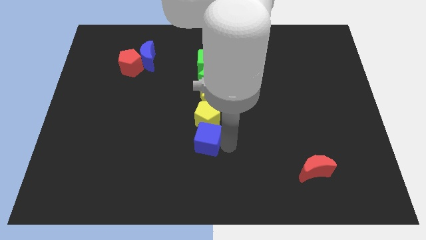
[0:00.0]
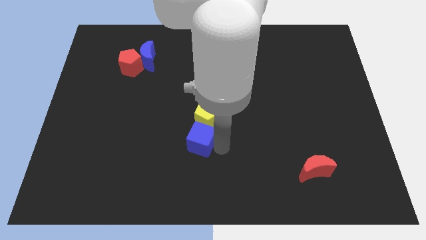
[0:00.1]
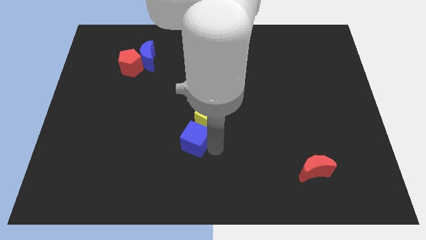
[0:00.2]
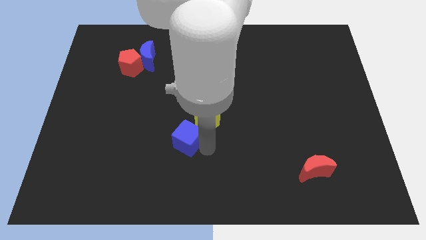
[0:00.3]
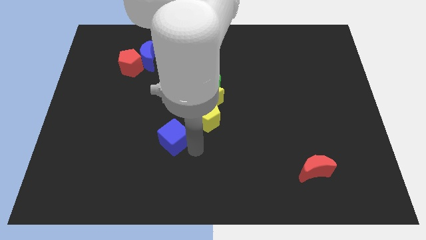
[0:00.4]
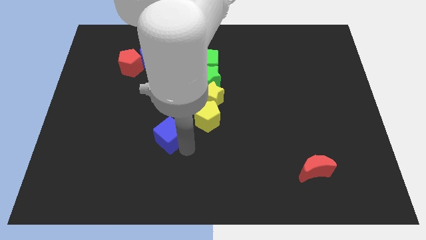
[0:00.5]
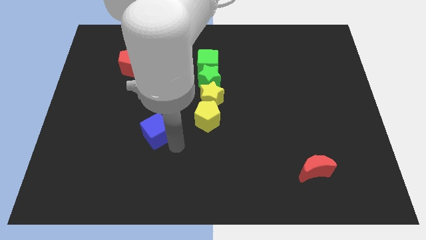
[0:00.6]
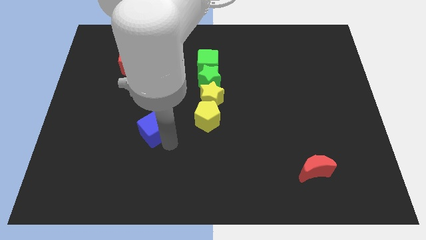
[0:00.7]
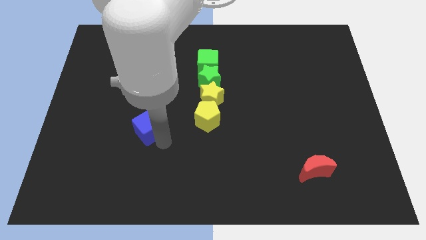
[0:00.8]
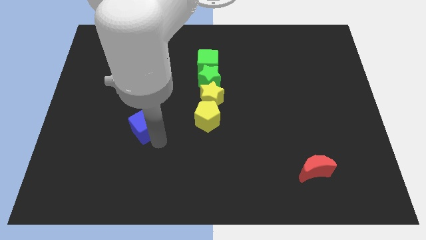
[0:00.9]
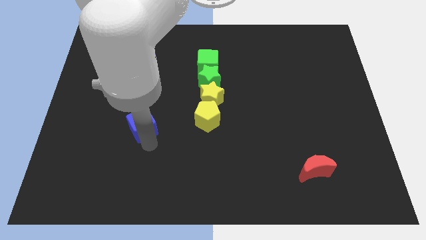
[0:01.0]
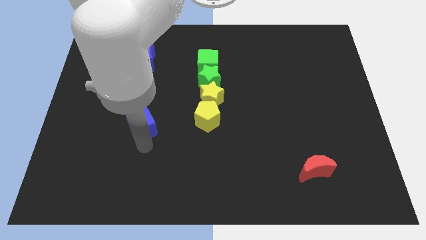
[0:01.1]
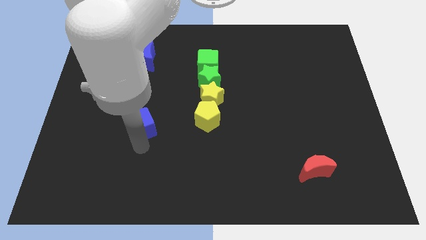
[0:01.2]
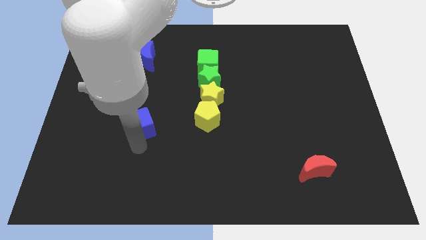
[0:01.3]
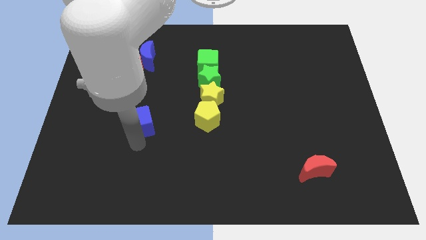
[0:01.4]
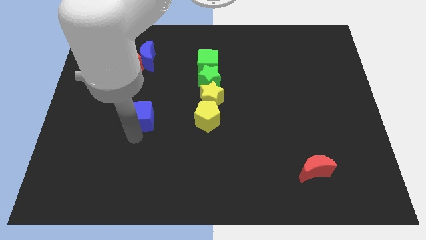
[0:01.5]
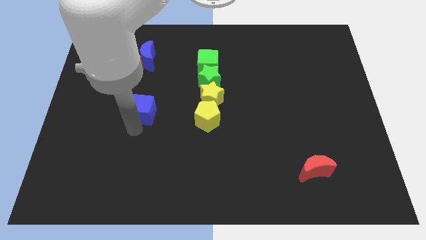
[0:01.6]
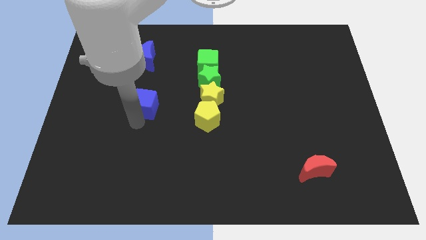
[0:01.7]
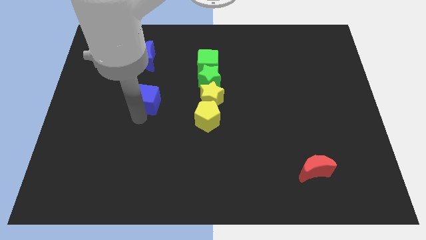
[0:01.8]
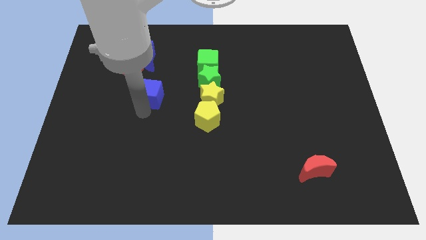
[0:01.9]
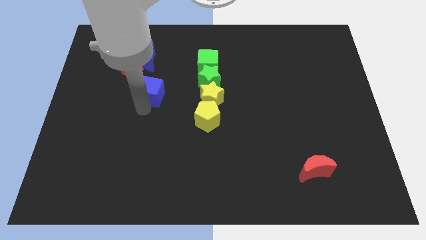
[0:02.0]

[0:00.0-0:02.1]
push the blue cube diagonal to the yellow pentagon

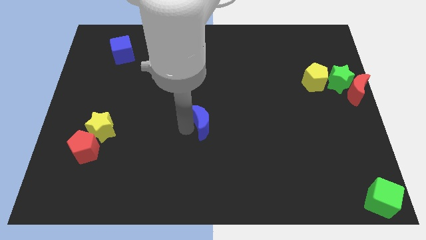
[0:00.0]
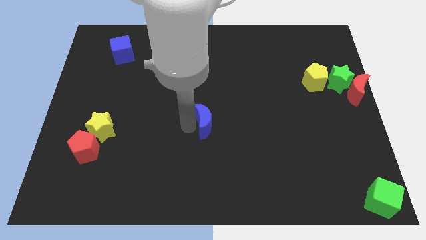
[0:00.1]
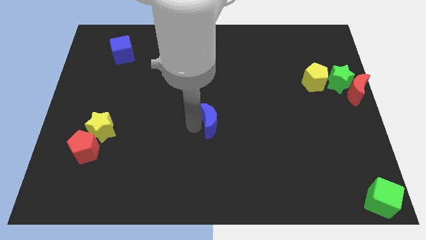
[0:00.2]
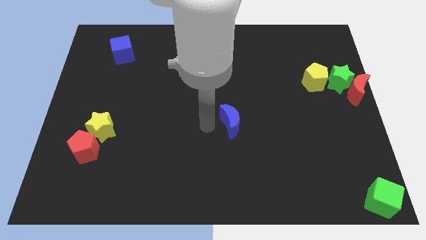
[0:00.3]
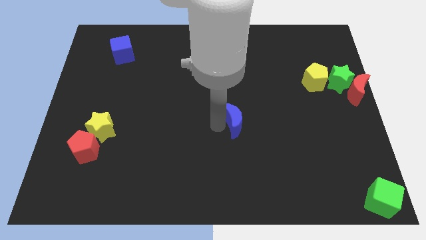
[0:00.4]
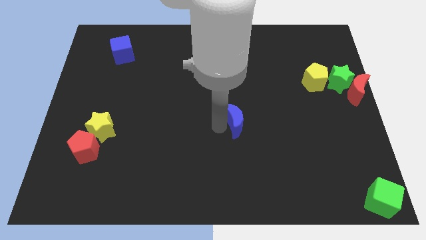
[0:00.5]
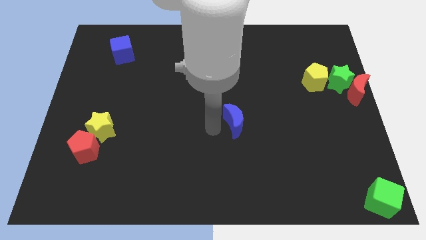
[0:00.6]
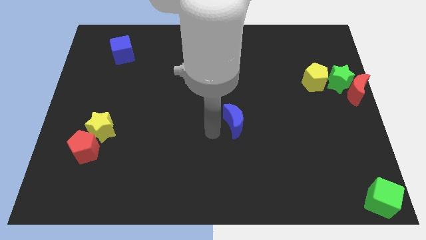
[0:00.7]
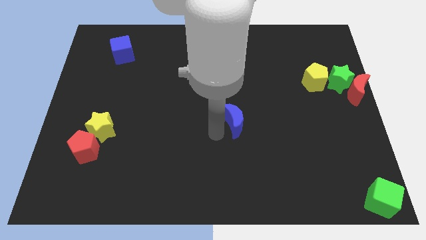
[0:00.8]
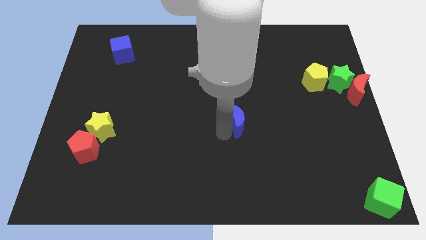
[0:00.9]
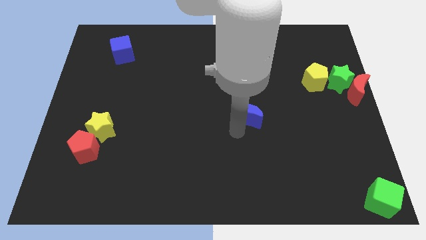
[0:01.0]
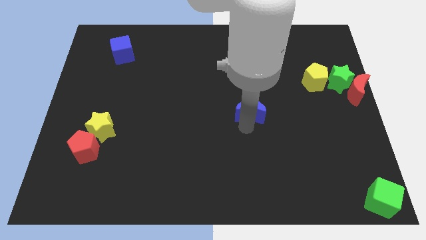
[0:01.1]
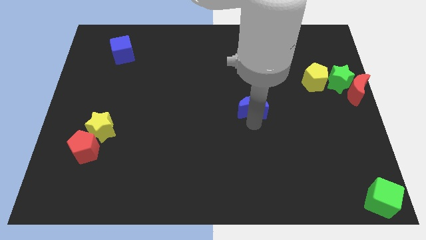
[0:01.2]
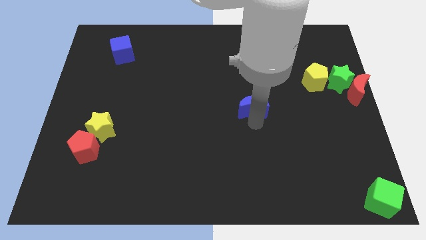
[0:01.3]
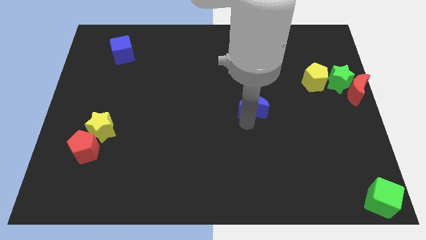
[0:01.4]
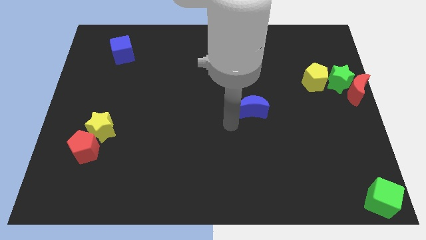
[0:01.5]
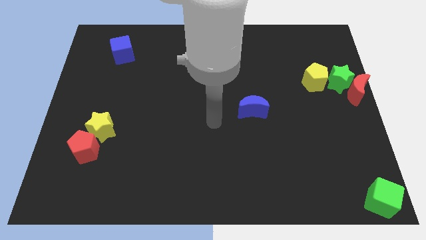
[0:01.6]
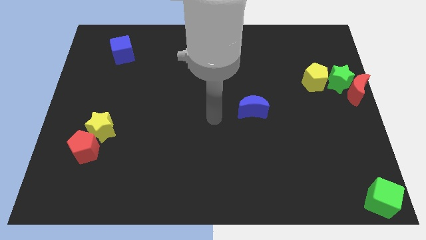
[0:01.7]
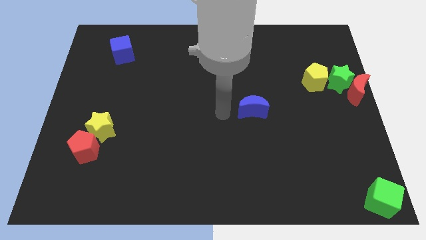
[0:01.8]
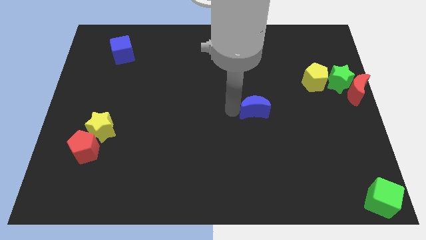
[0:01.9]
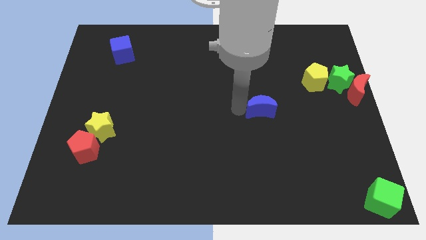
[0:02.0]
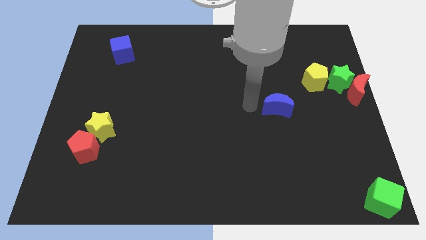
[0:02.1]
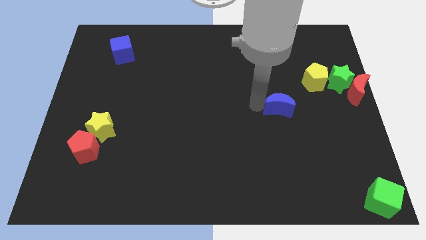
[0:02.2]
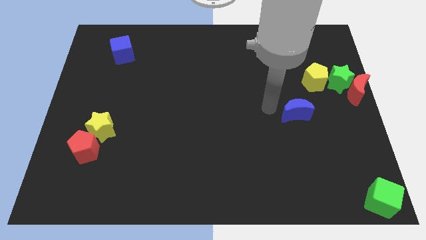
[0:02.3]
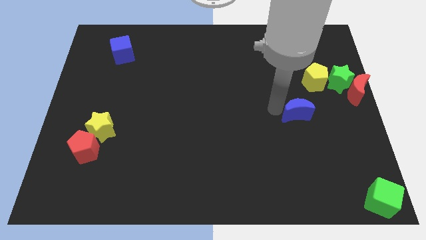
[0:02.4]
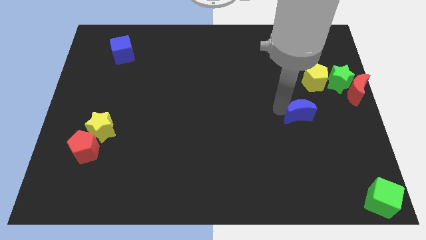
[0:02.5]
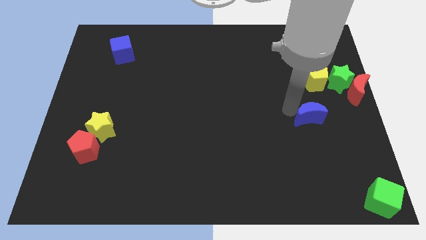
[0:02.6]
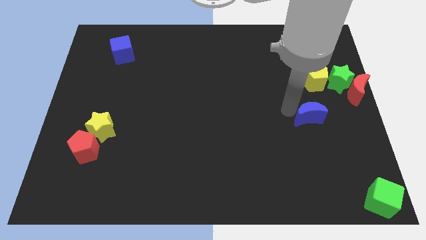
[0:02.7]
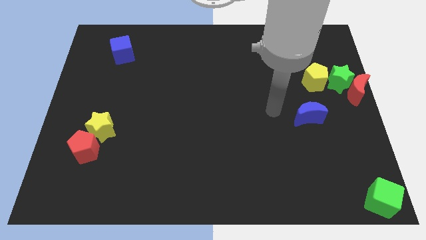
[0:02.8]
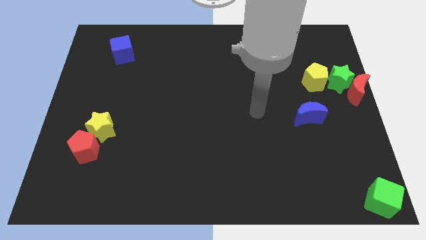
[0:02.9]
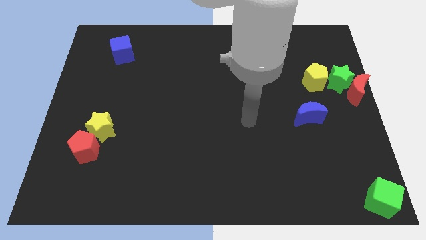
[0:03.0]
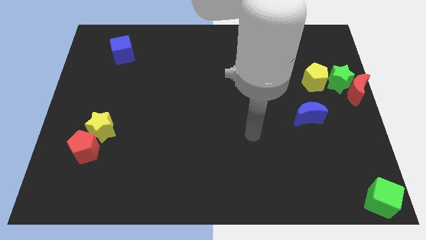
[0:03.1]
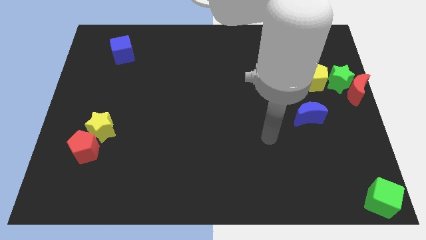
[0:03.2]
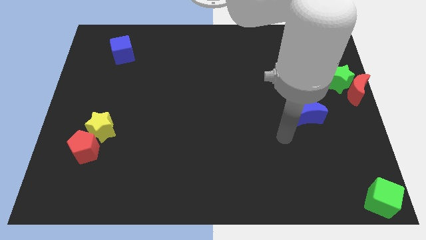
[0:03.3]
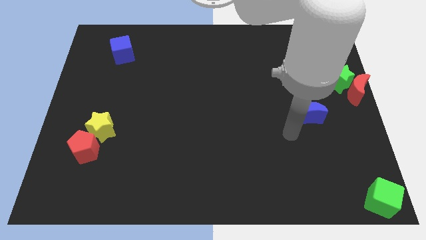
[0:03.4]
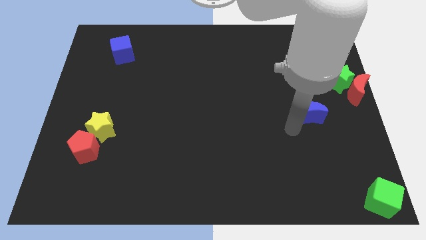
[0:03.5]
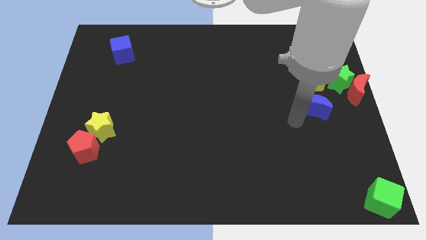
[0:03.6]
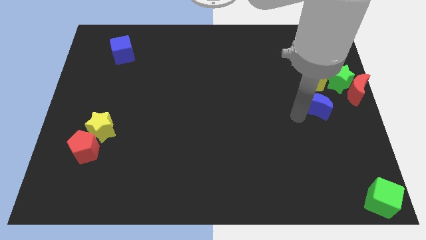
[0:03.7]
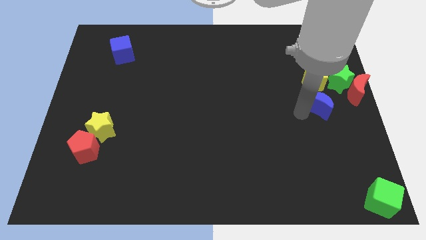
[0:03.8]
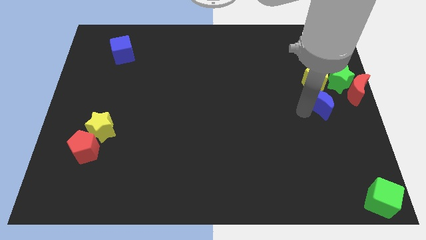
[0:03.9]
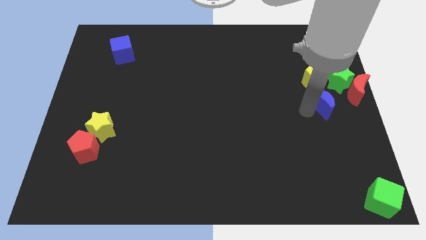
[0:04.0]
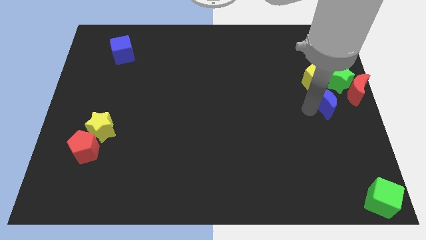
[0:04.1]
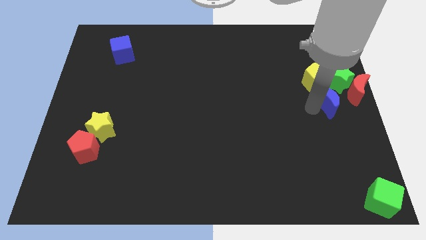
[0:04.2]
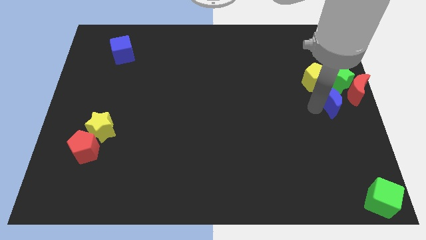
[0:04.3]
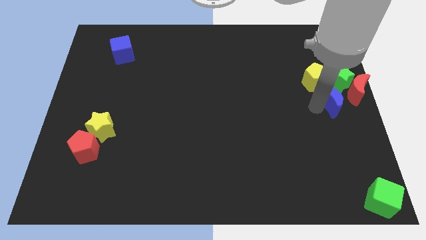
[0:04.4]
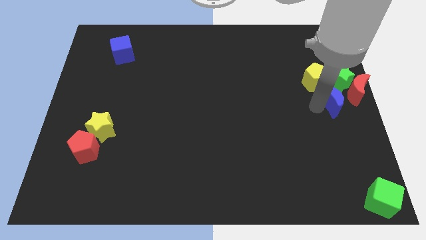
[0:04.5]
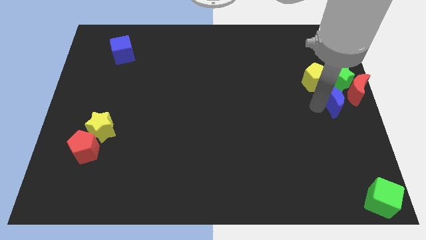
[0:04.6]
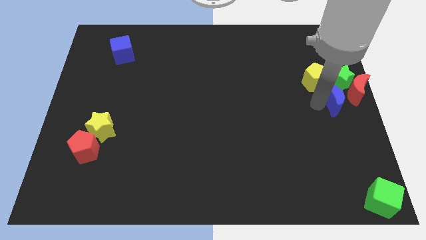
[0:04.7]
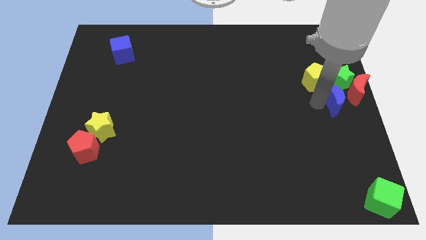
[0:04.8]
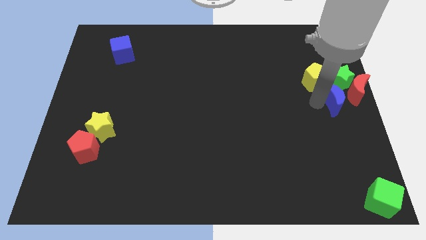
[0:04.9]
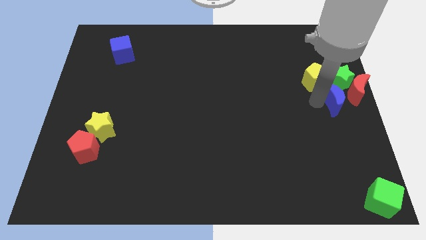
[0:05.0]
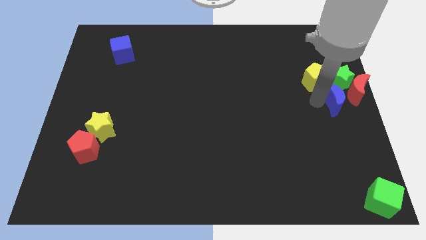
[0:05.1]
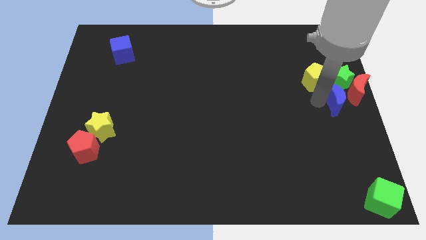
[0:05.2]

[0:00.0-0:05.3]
push blue crescent into green star

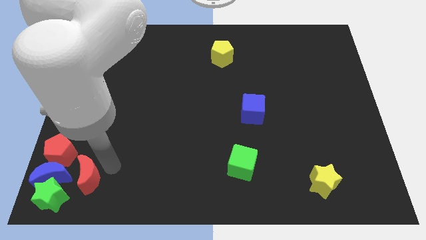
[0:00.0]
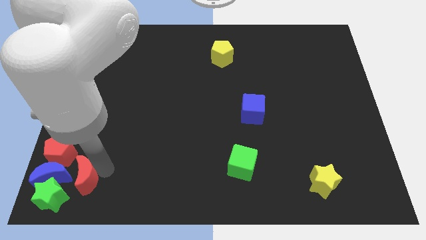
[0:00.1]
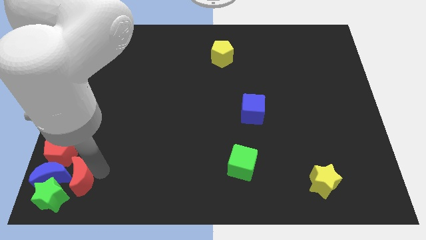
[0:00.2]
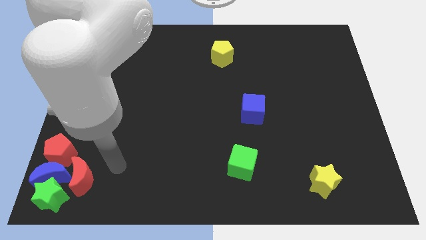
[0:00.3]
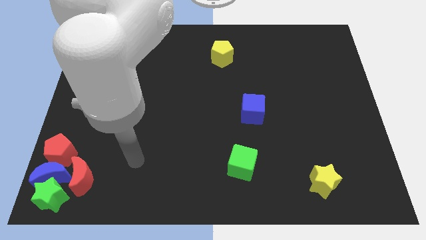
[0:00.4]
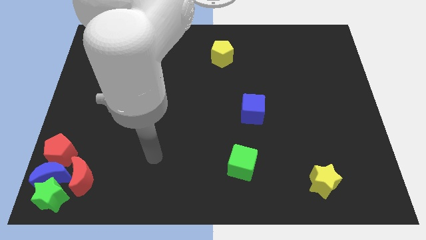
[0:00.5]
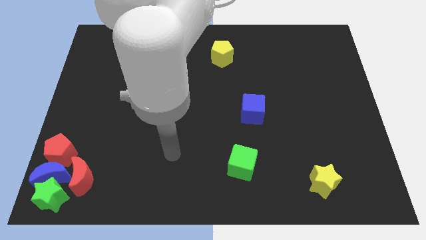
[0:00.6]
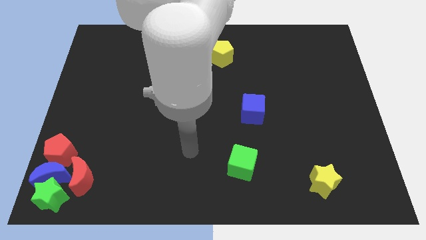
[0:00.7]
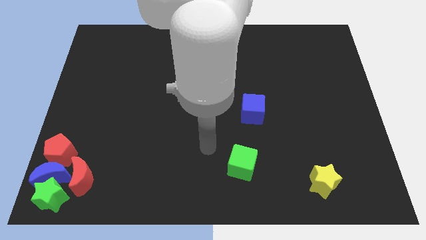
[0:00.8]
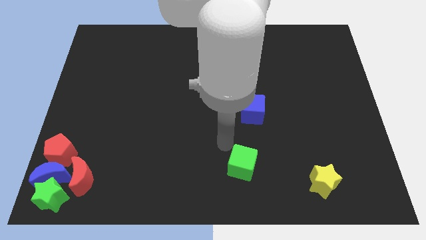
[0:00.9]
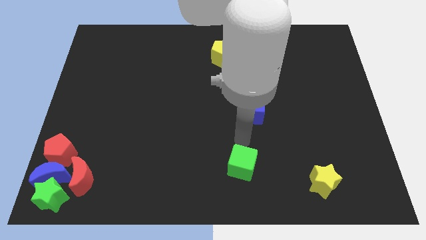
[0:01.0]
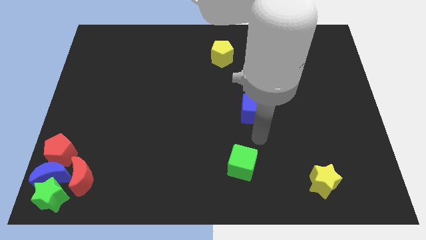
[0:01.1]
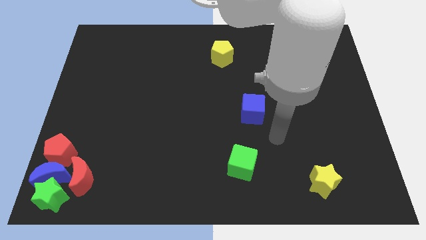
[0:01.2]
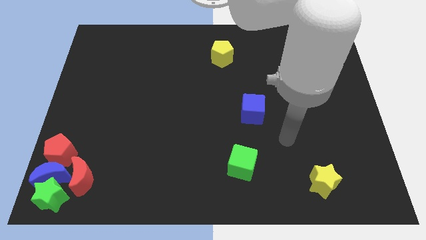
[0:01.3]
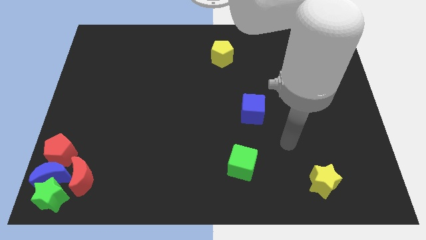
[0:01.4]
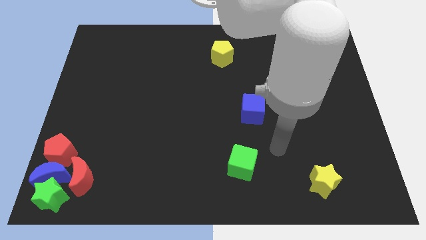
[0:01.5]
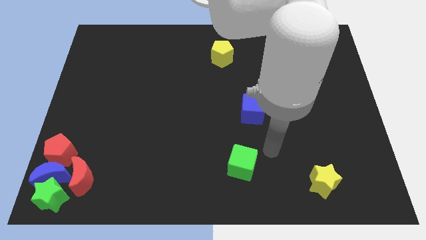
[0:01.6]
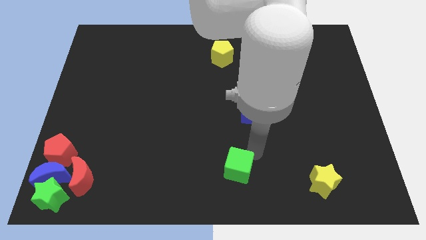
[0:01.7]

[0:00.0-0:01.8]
point your arm at the top right of the green cube
